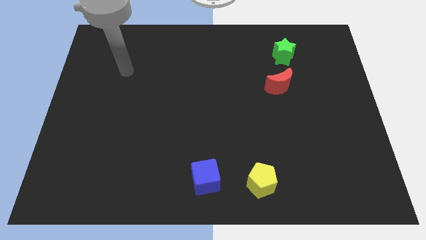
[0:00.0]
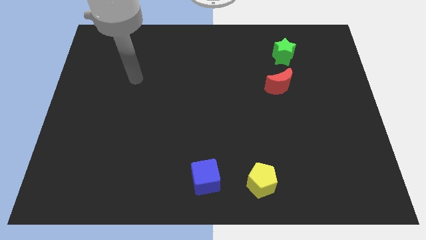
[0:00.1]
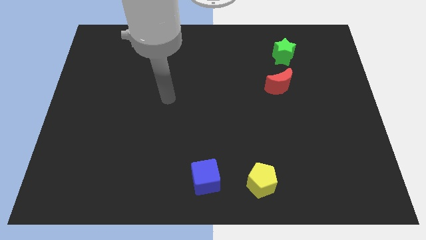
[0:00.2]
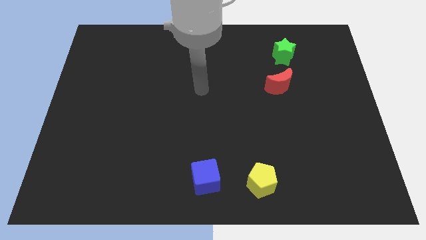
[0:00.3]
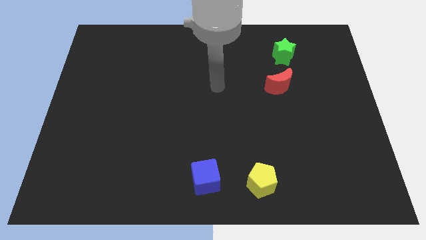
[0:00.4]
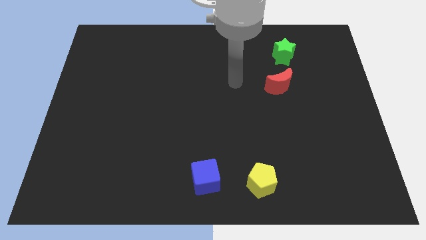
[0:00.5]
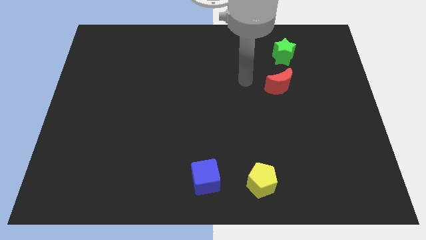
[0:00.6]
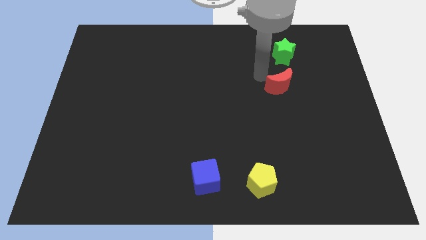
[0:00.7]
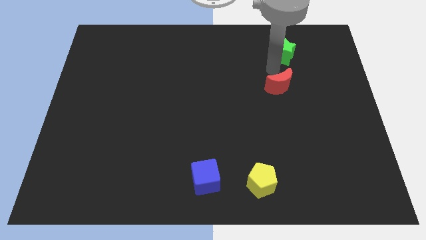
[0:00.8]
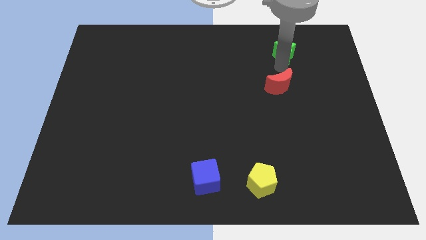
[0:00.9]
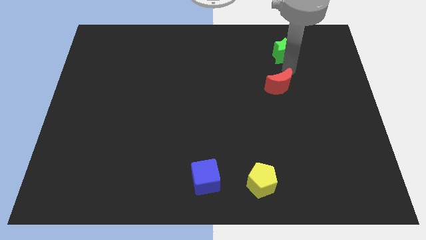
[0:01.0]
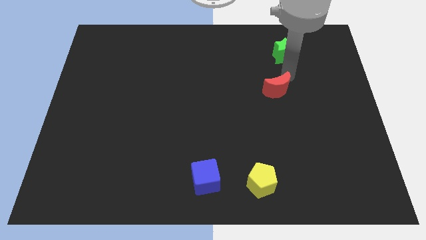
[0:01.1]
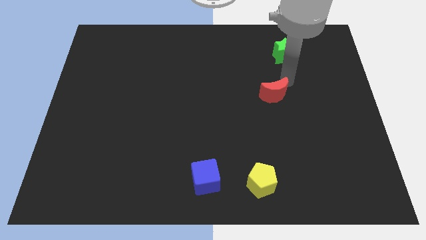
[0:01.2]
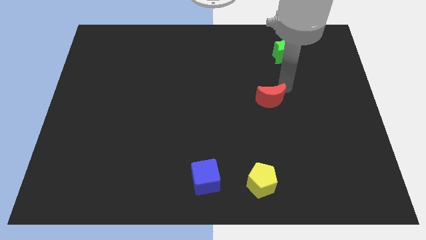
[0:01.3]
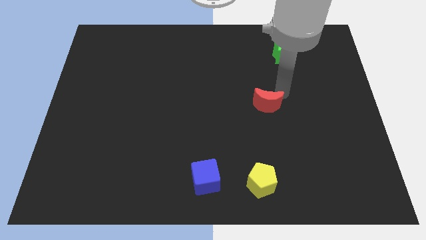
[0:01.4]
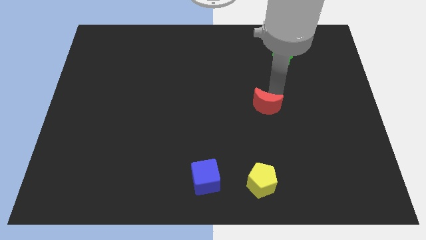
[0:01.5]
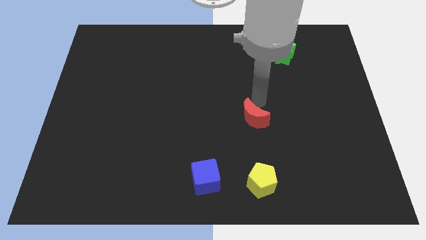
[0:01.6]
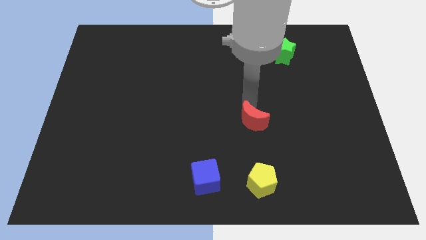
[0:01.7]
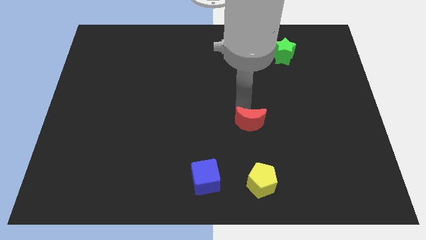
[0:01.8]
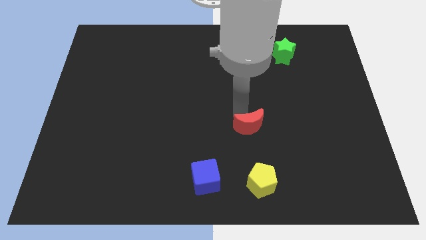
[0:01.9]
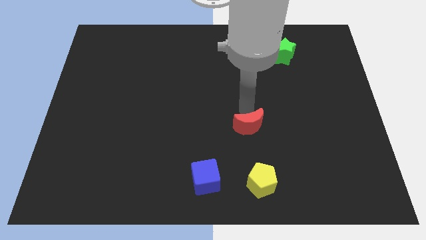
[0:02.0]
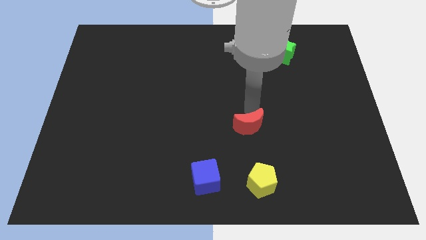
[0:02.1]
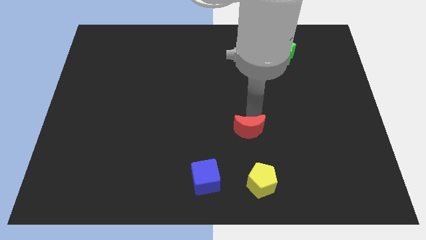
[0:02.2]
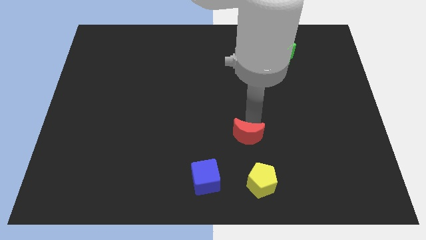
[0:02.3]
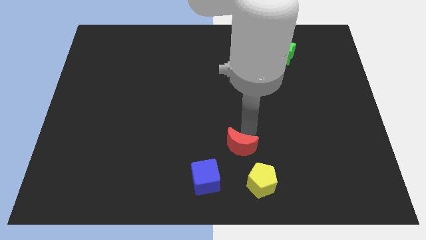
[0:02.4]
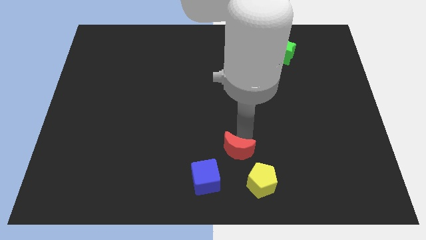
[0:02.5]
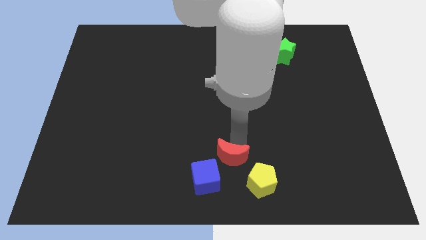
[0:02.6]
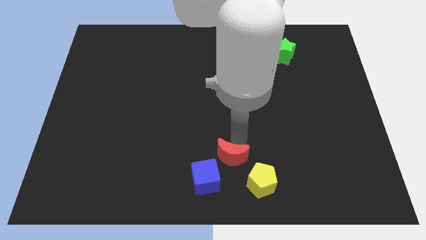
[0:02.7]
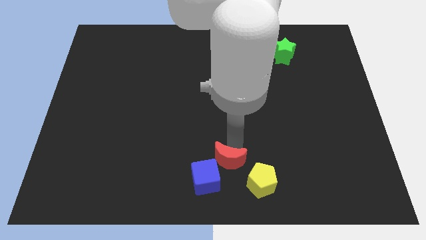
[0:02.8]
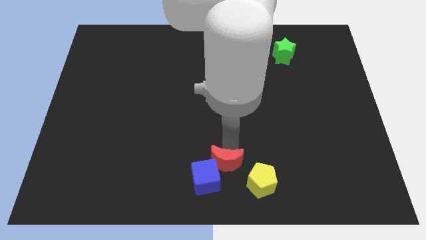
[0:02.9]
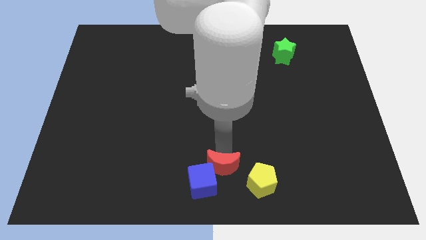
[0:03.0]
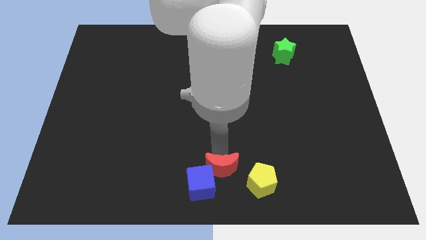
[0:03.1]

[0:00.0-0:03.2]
move the red block towards the cube

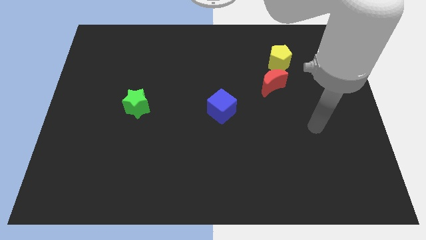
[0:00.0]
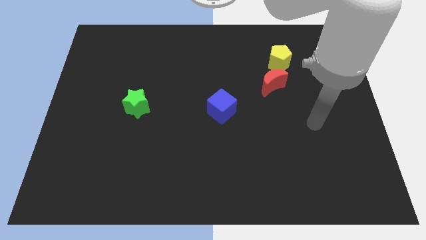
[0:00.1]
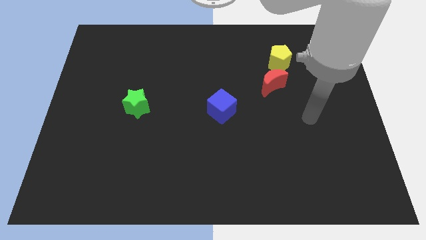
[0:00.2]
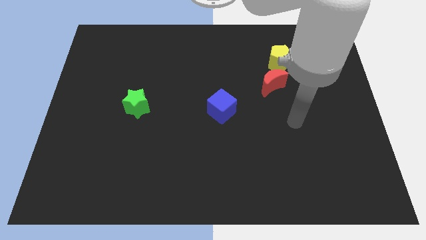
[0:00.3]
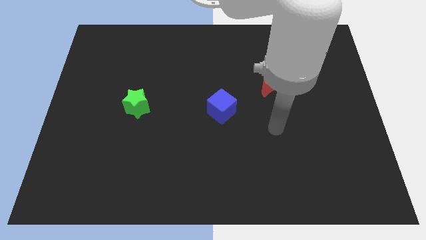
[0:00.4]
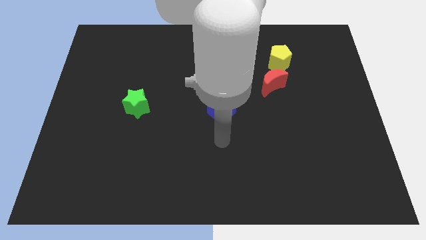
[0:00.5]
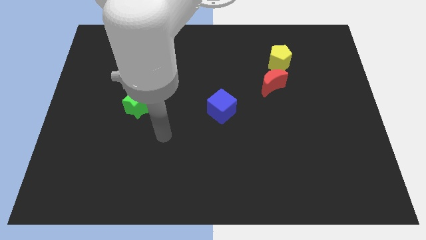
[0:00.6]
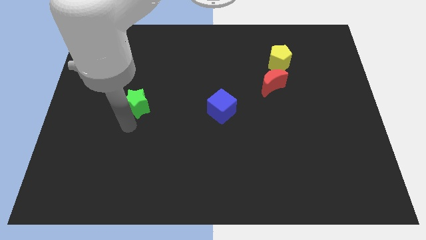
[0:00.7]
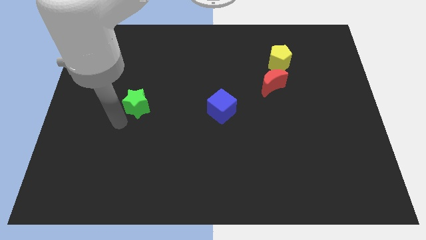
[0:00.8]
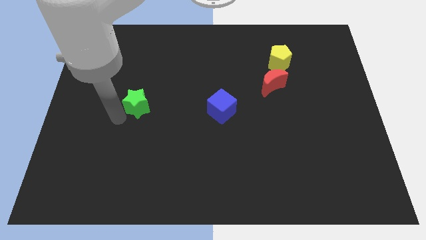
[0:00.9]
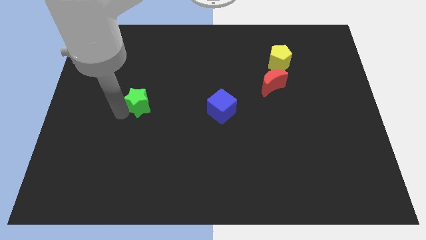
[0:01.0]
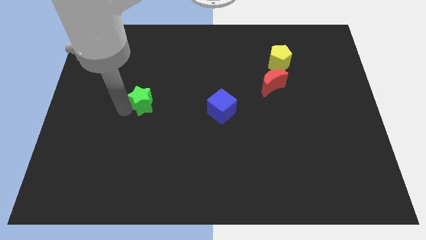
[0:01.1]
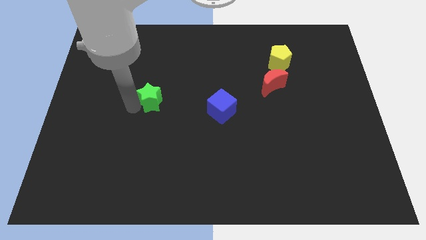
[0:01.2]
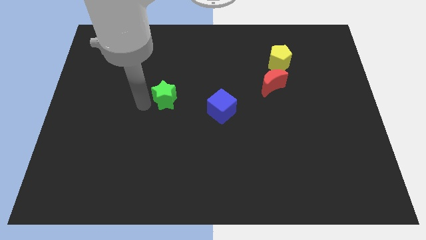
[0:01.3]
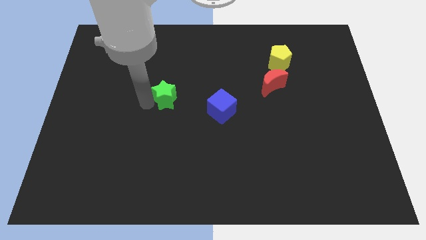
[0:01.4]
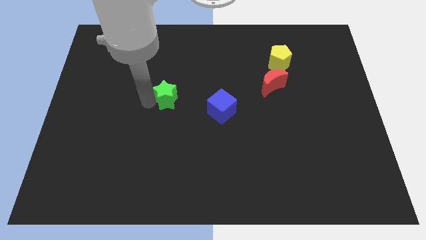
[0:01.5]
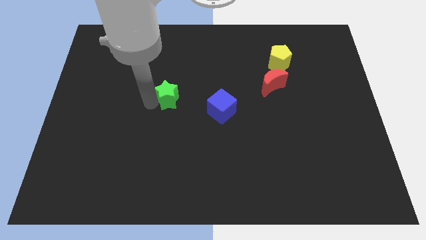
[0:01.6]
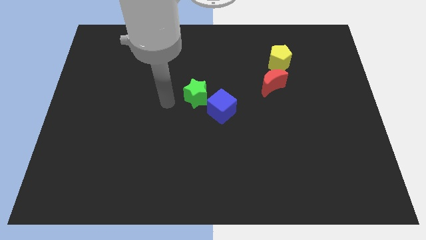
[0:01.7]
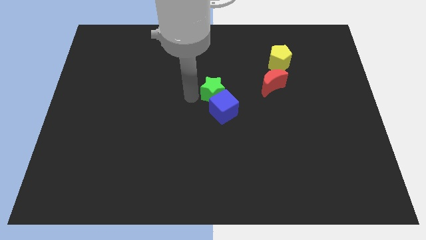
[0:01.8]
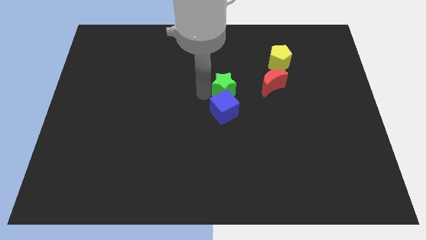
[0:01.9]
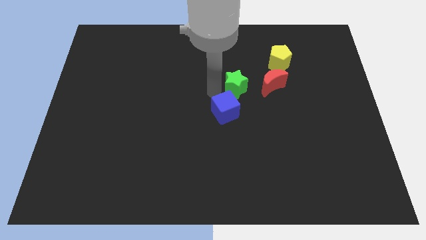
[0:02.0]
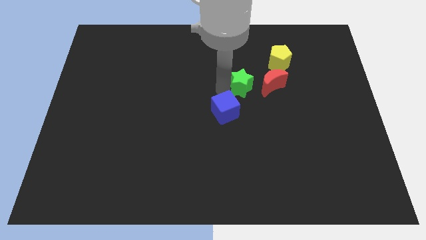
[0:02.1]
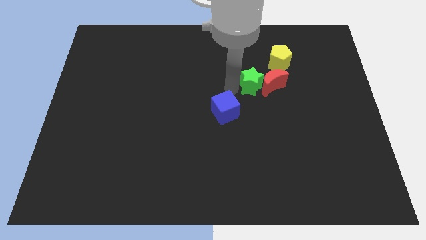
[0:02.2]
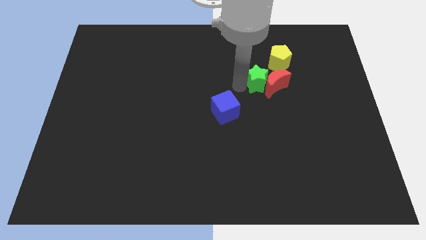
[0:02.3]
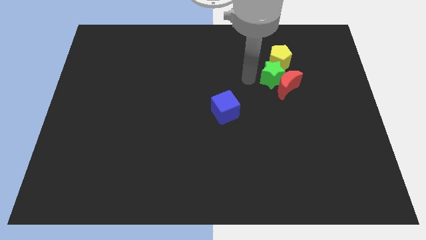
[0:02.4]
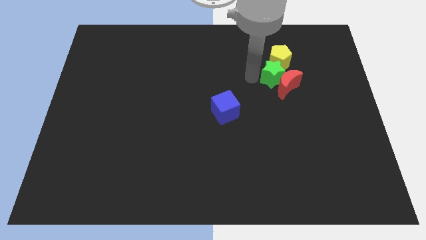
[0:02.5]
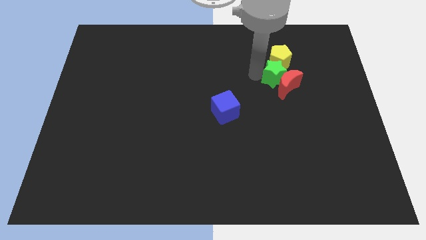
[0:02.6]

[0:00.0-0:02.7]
move the star to the pentagon

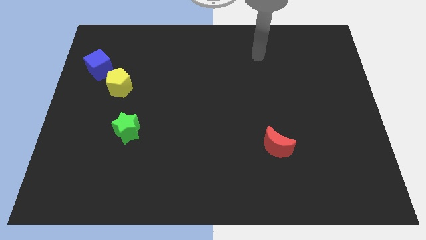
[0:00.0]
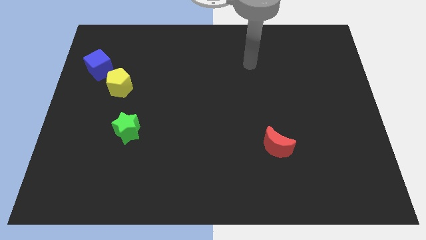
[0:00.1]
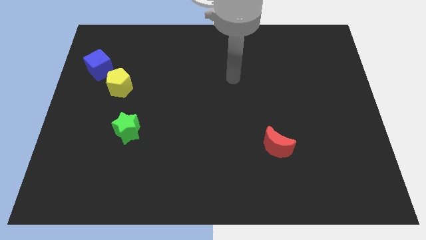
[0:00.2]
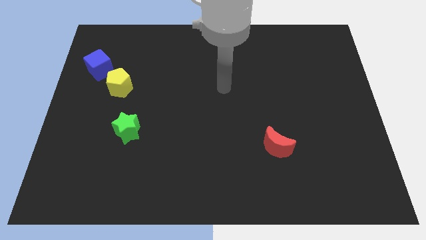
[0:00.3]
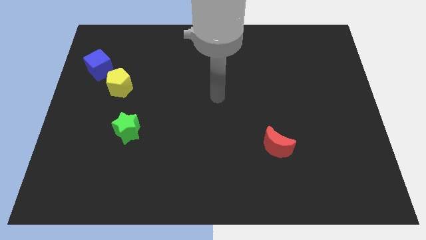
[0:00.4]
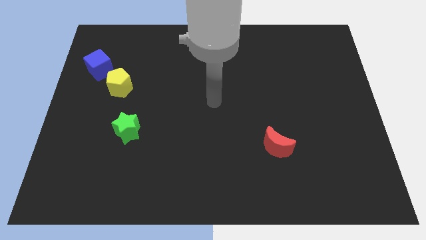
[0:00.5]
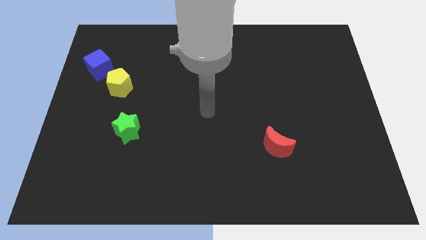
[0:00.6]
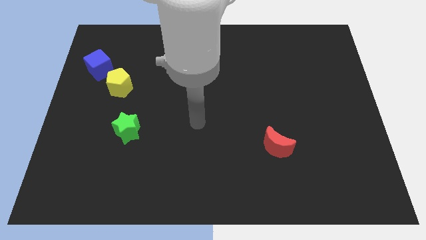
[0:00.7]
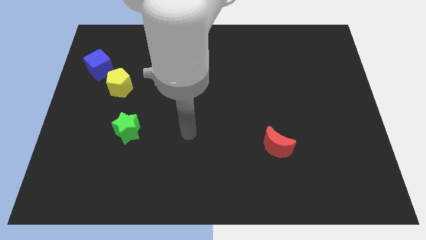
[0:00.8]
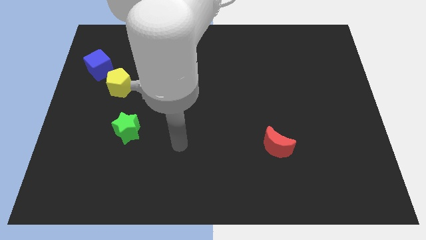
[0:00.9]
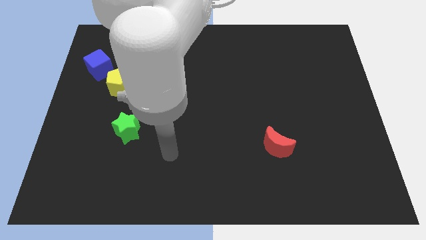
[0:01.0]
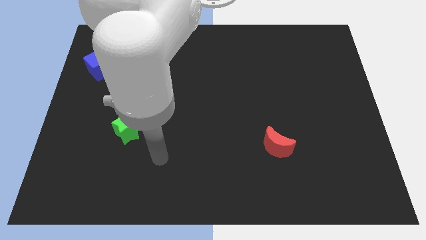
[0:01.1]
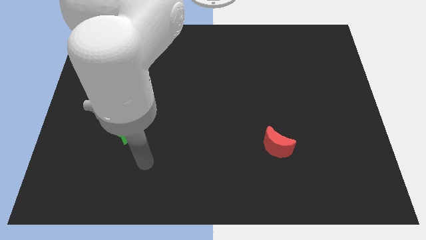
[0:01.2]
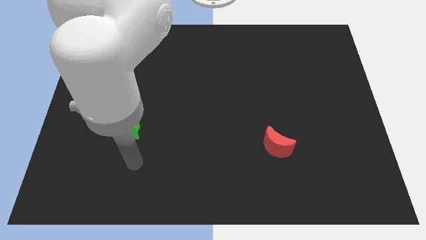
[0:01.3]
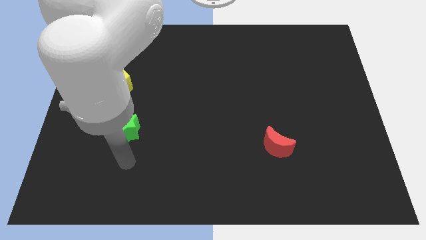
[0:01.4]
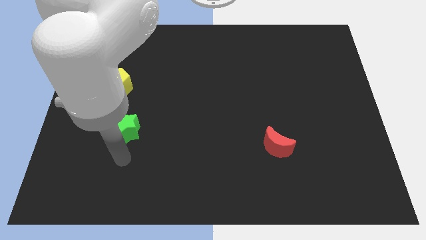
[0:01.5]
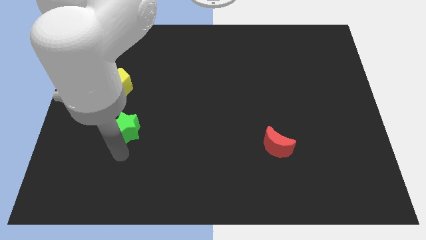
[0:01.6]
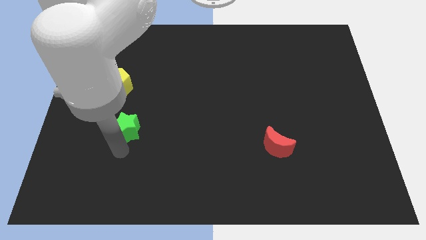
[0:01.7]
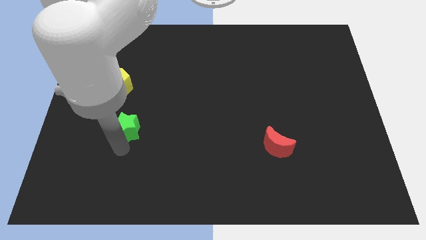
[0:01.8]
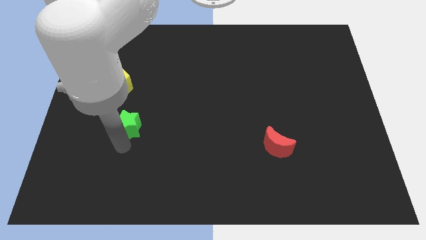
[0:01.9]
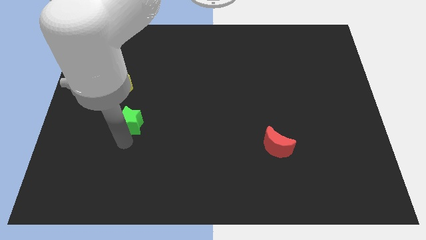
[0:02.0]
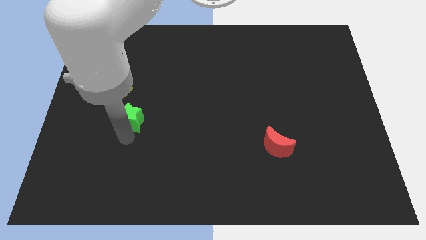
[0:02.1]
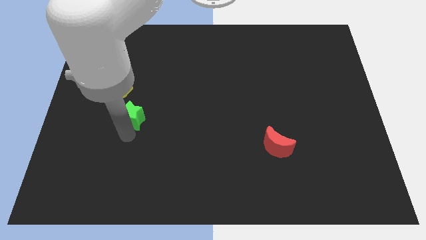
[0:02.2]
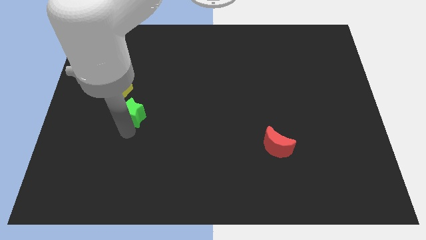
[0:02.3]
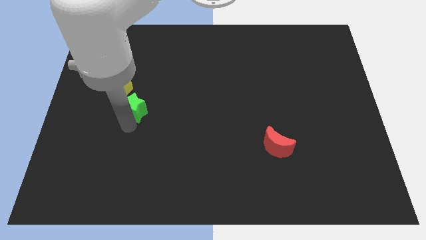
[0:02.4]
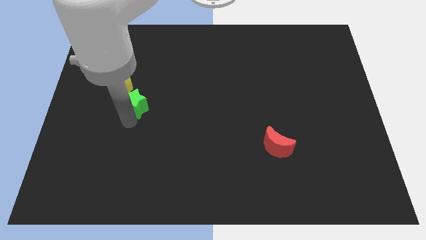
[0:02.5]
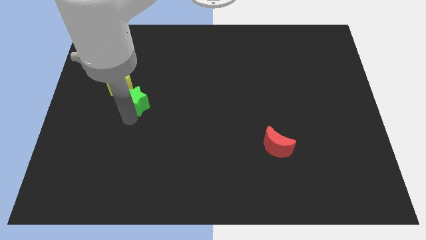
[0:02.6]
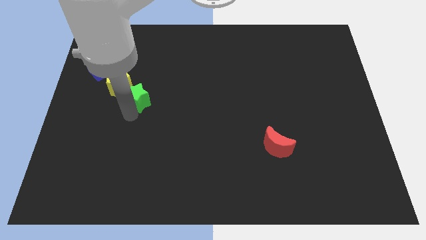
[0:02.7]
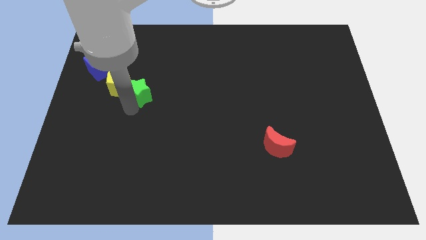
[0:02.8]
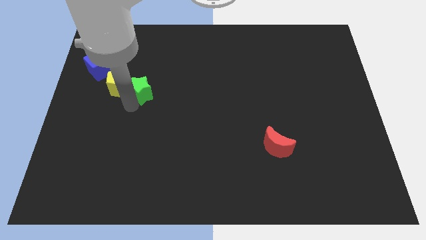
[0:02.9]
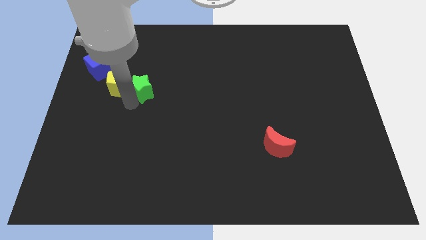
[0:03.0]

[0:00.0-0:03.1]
put the green star next to the yellow pentagon
